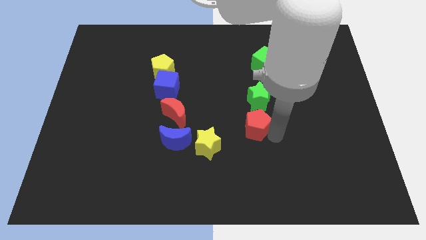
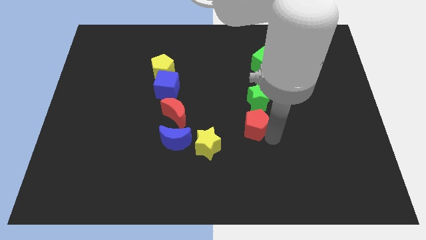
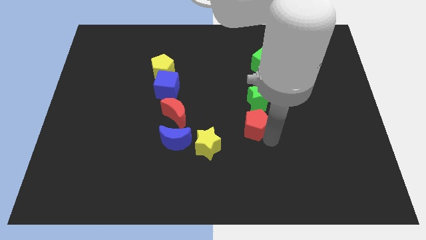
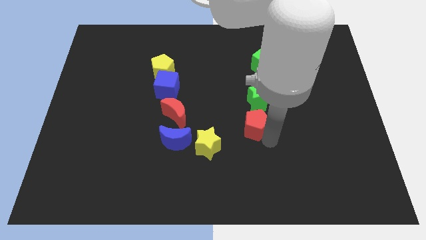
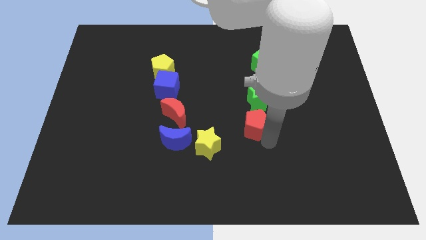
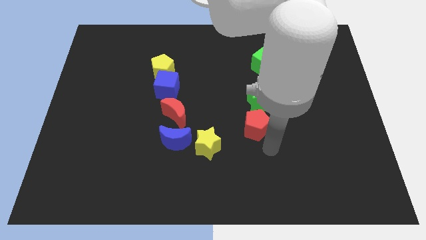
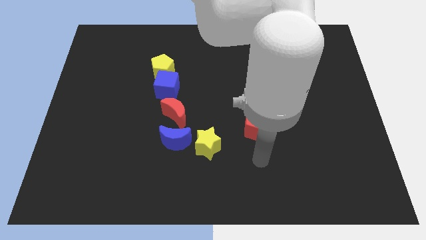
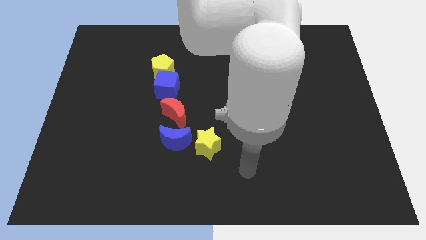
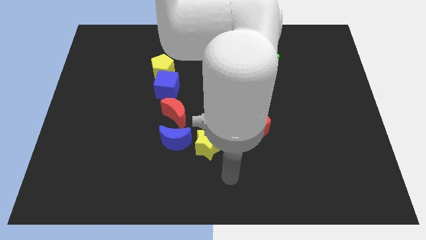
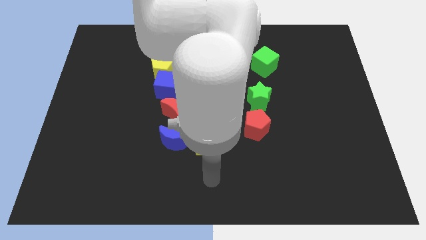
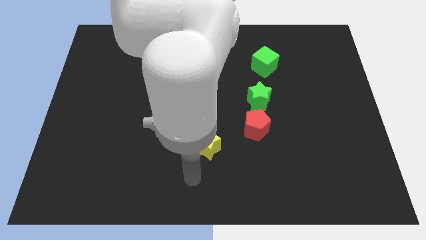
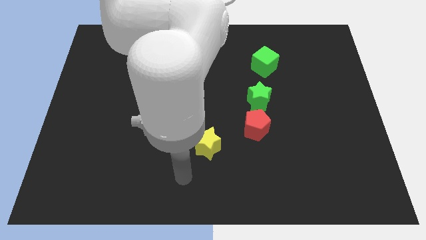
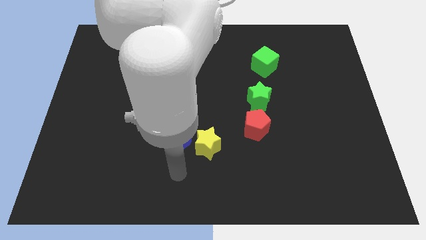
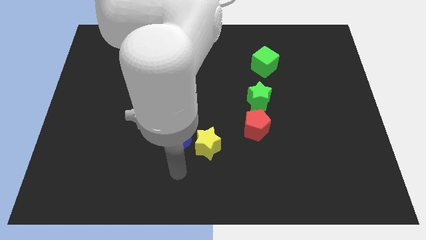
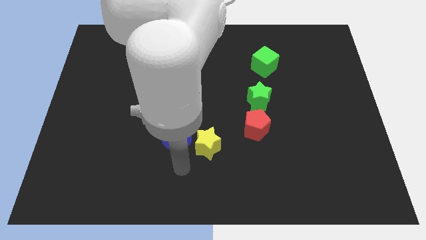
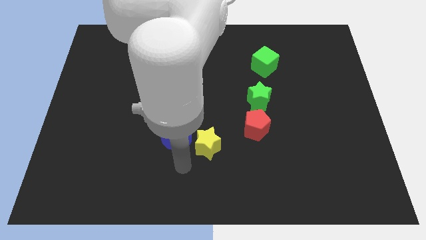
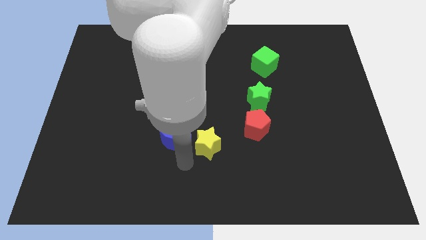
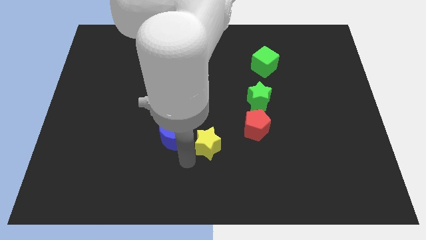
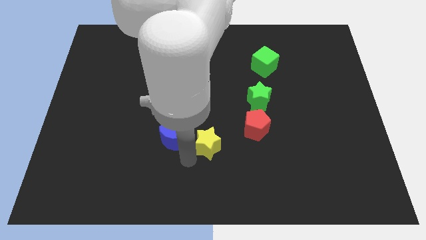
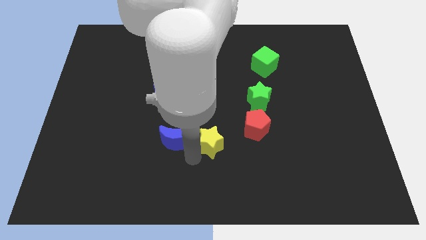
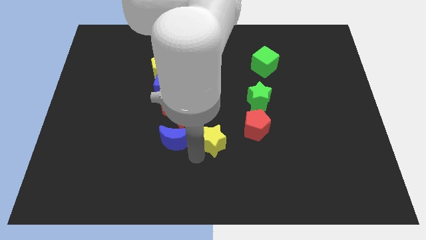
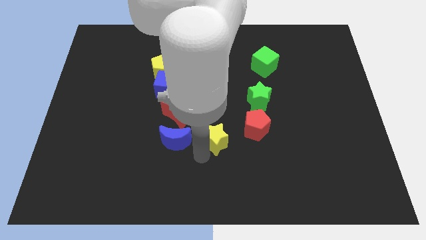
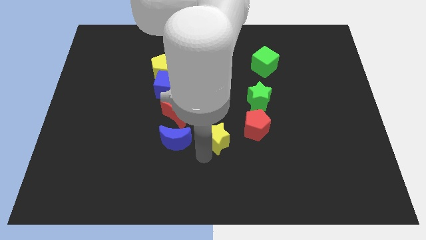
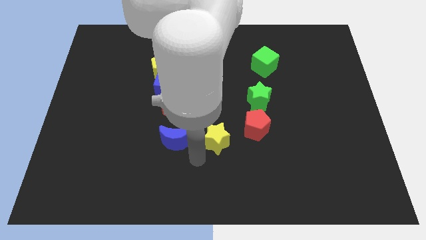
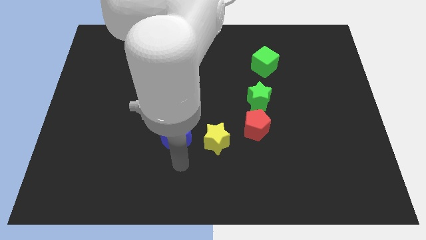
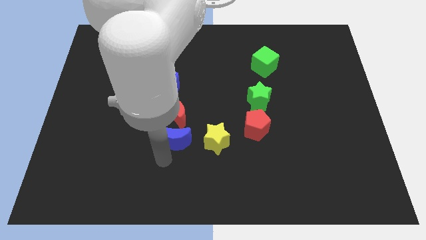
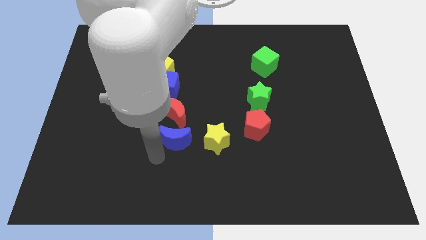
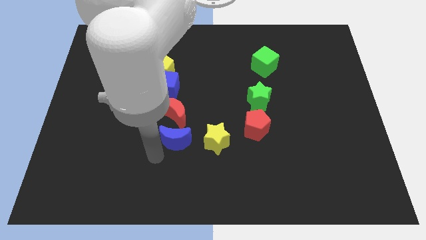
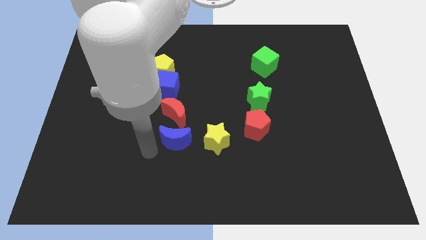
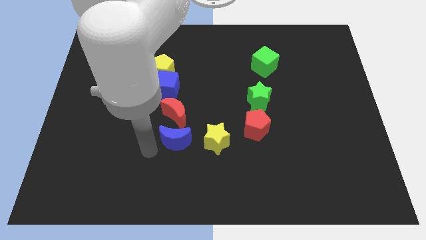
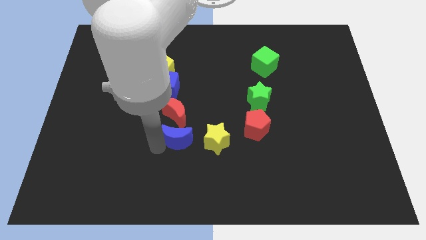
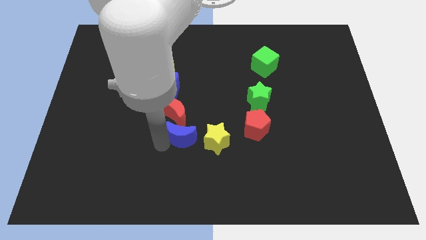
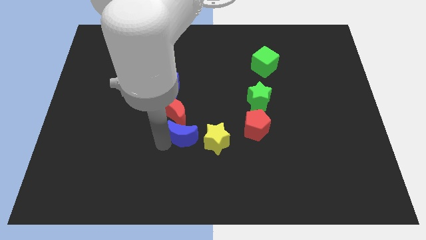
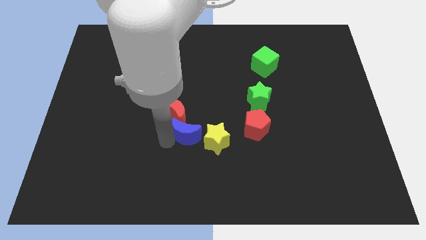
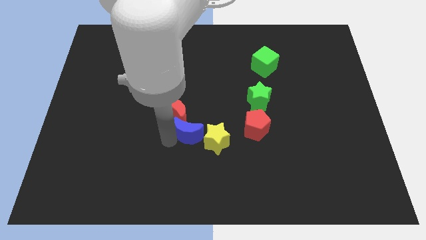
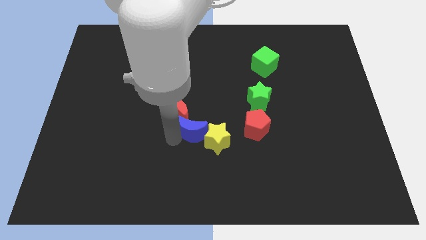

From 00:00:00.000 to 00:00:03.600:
put the blue semi circle and red crescent together

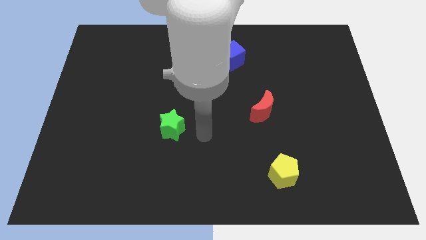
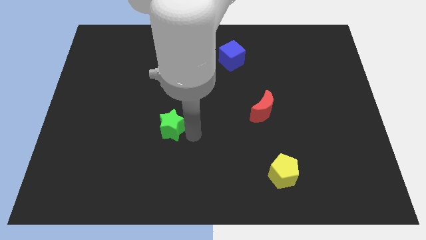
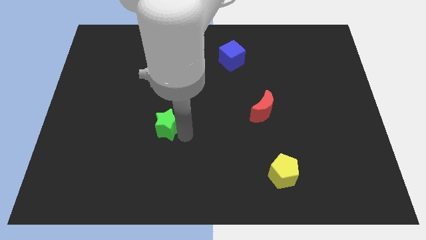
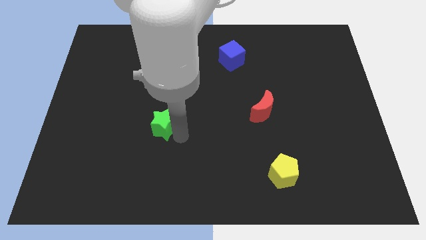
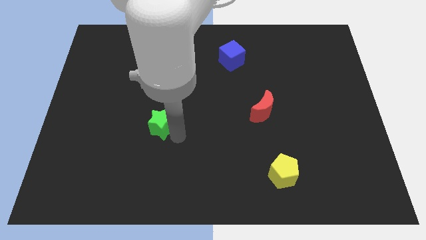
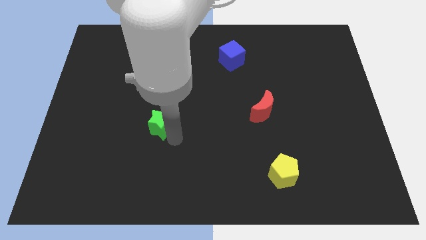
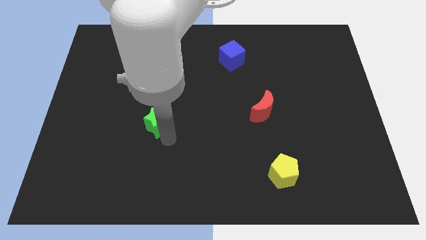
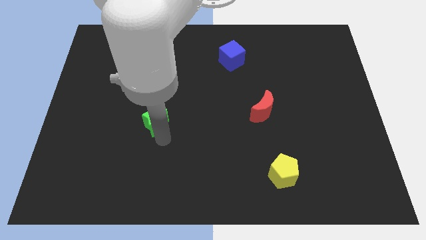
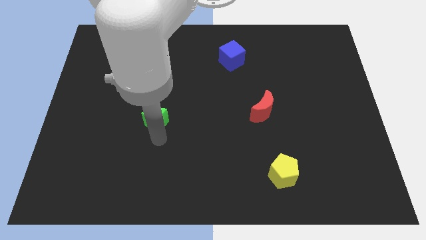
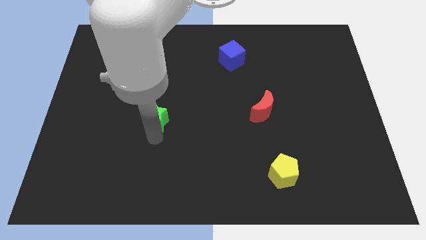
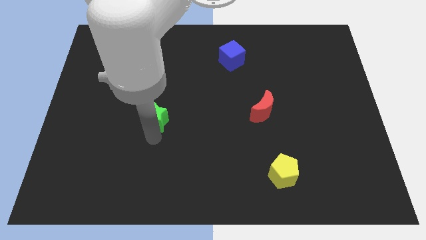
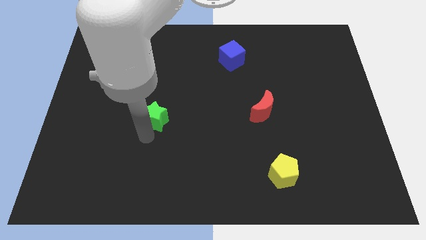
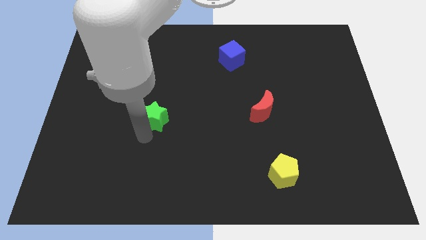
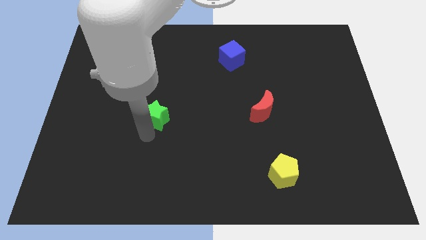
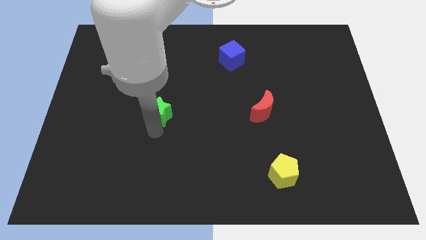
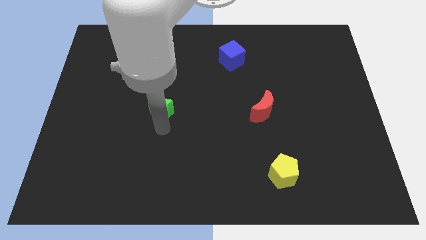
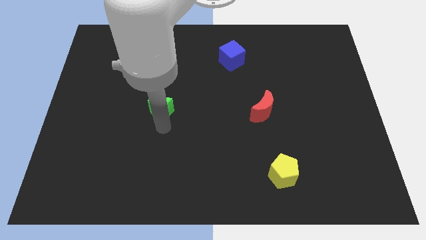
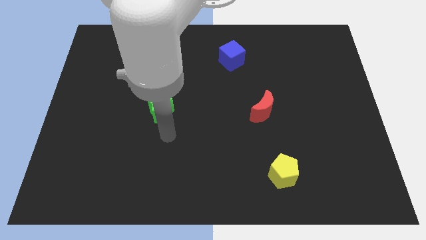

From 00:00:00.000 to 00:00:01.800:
put the star to the left of the crescent

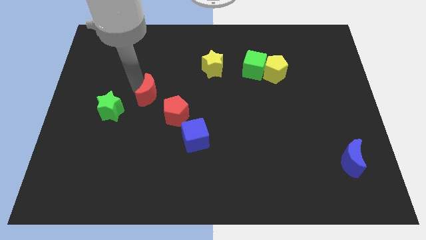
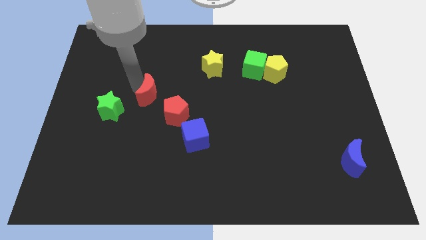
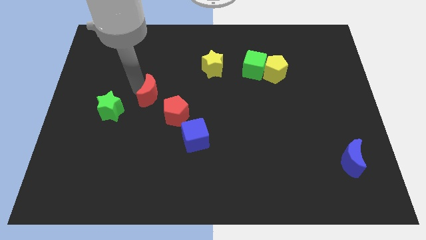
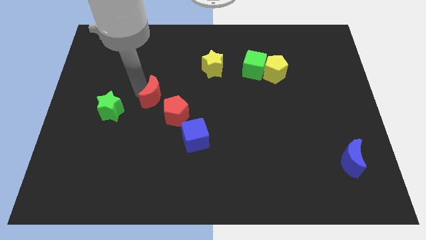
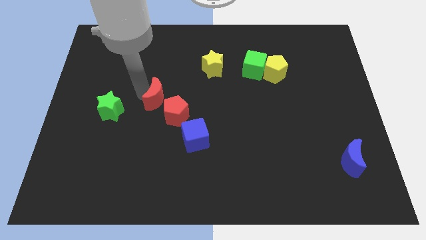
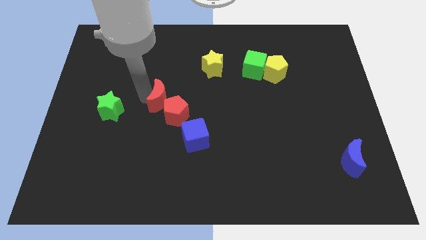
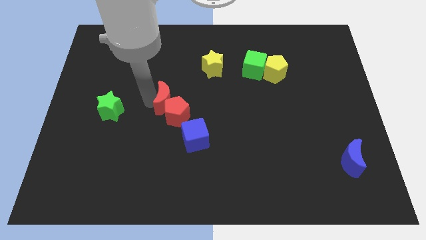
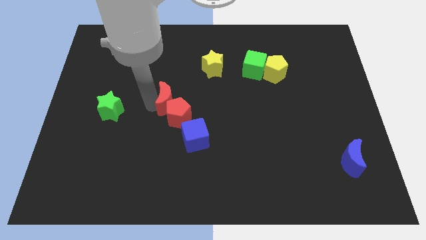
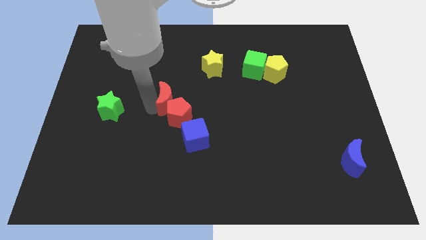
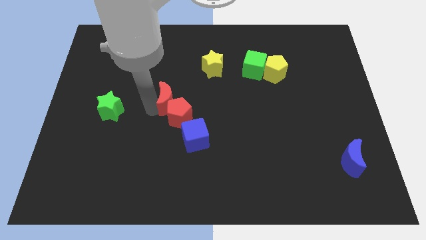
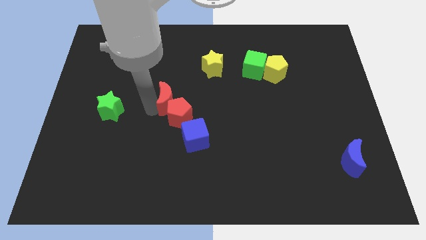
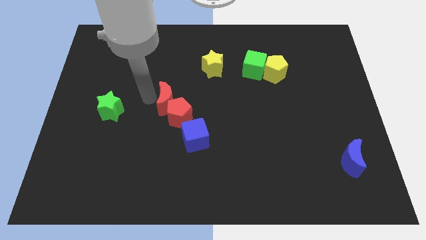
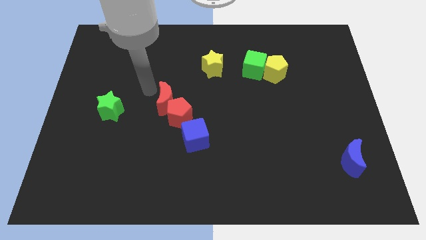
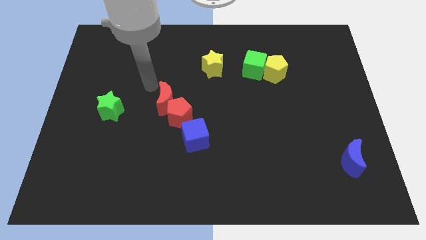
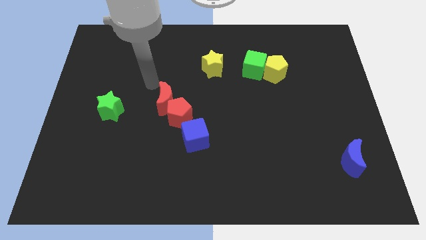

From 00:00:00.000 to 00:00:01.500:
place the red crescent above the red pentagon

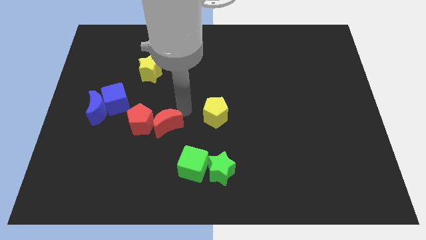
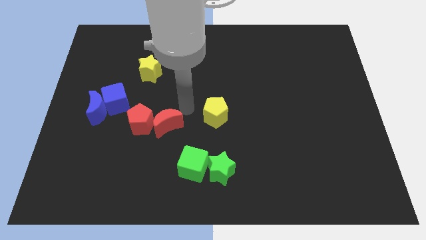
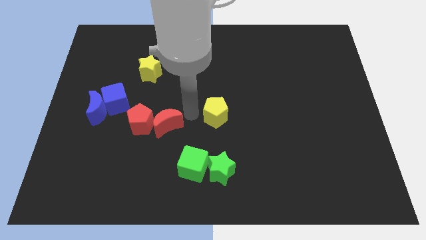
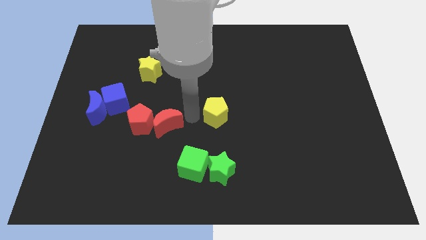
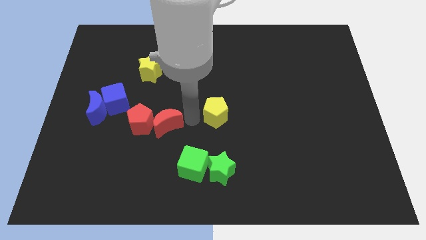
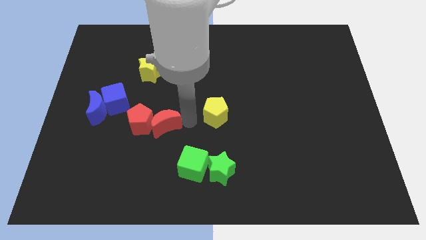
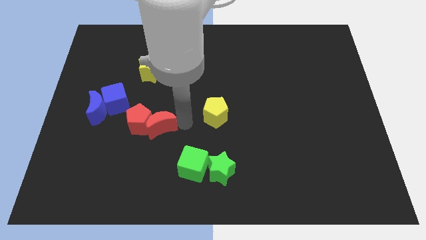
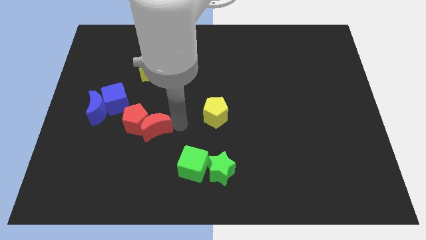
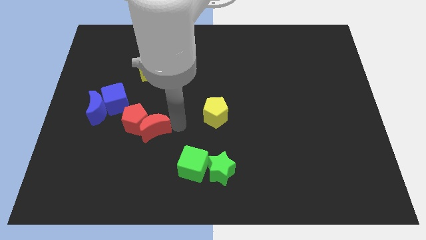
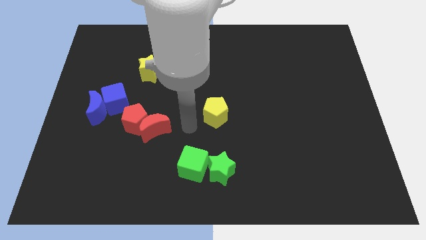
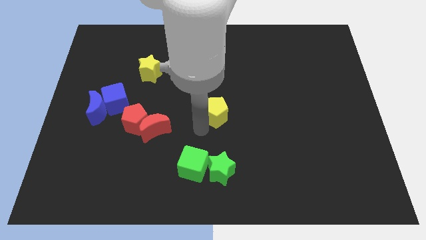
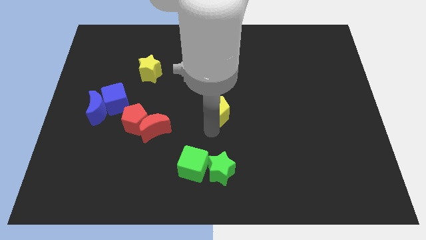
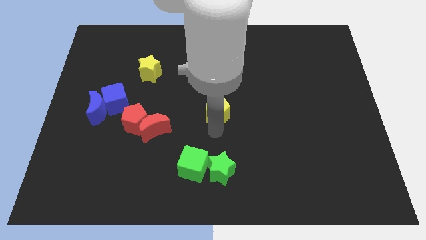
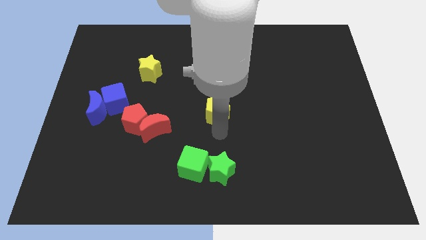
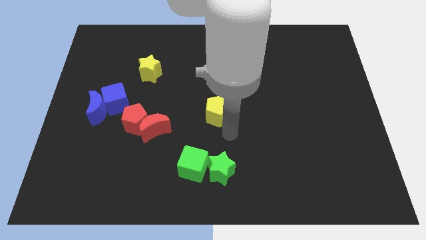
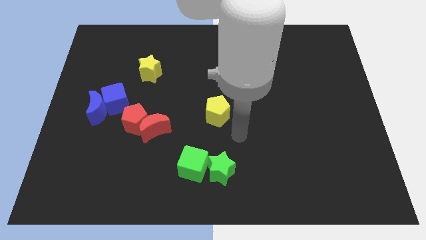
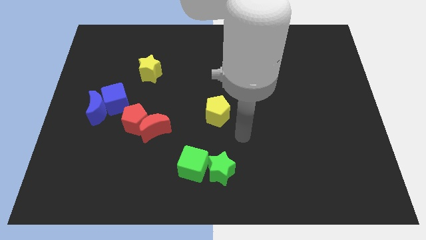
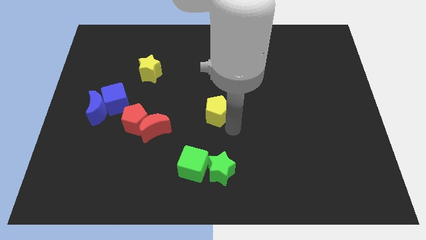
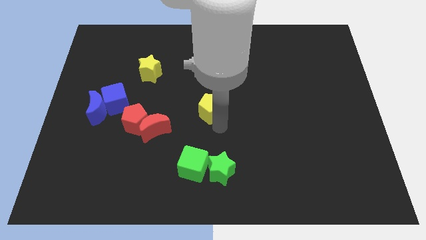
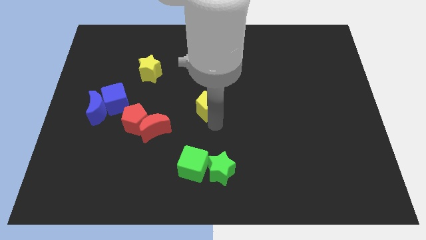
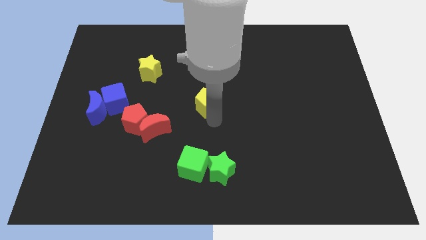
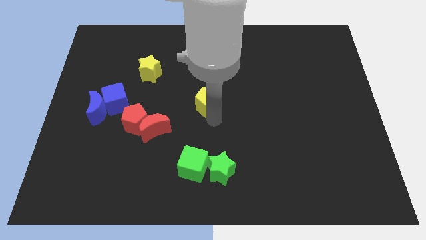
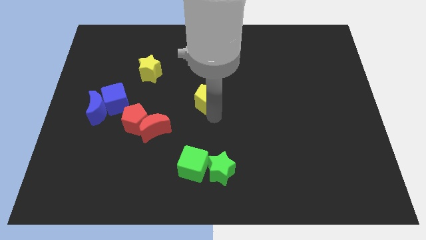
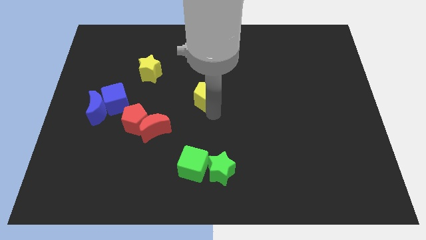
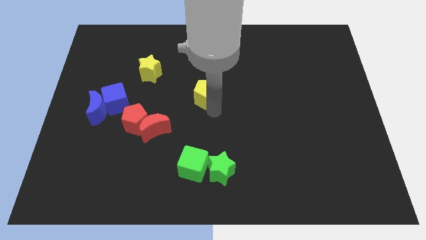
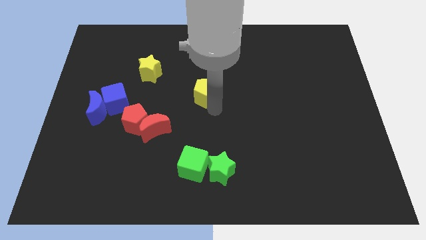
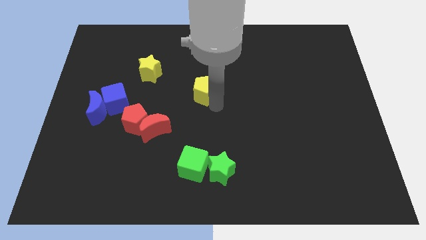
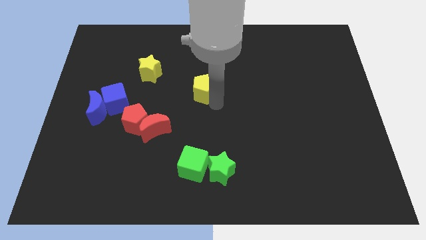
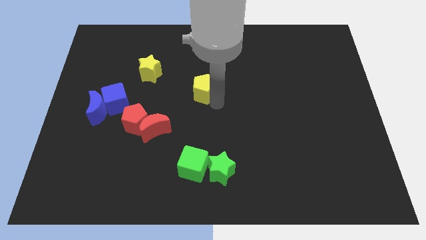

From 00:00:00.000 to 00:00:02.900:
separate the yellow pentagon from red blocks
